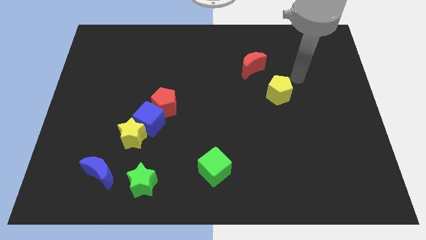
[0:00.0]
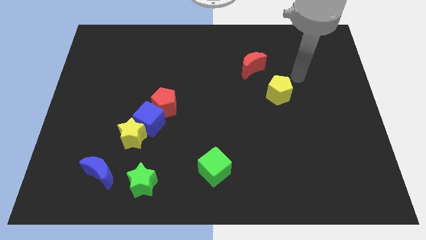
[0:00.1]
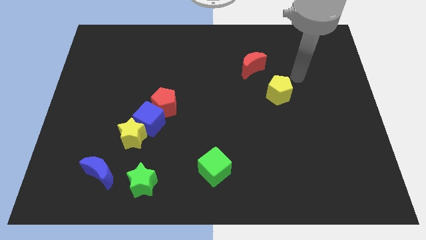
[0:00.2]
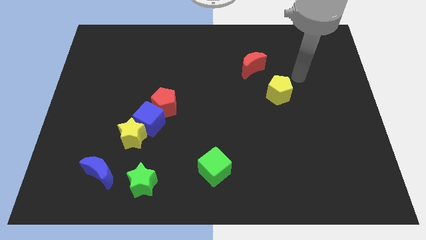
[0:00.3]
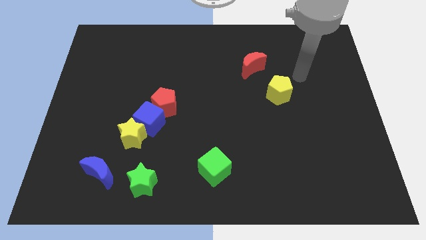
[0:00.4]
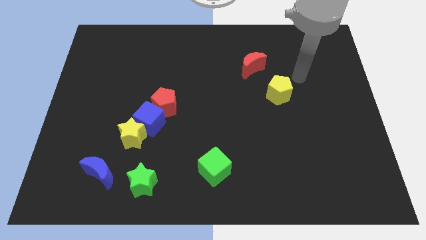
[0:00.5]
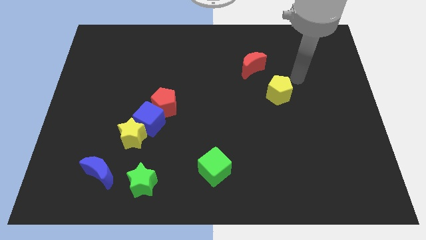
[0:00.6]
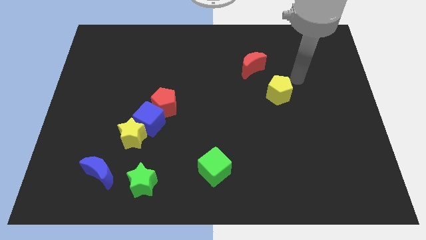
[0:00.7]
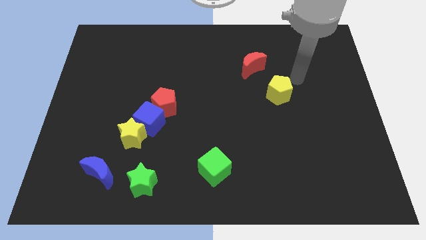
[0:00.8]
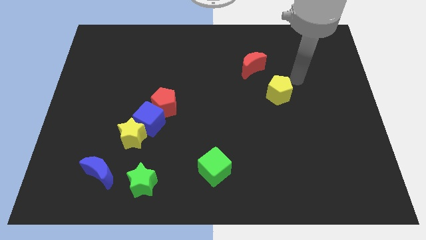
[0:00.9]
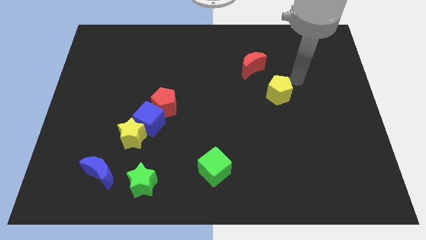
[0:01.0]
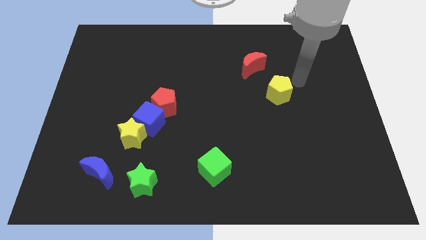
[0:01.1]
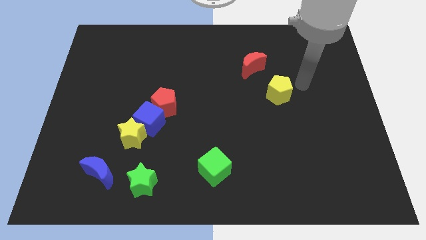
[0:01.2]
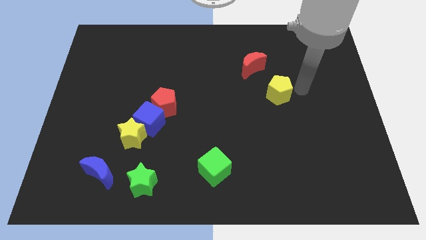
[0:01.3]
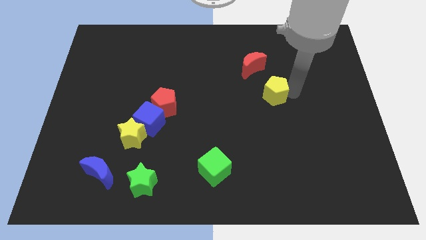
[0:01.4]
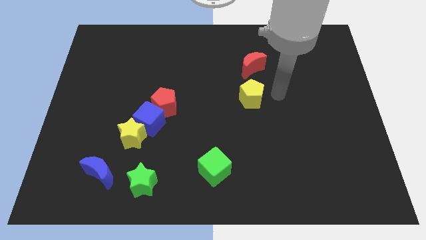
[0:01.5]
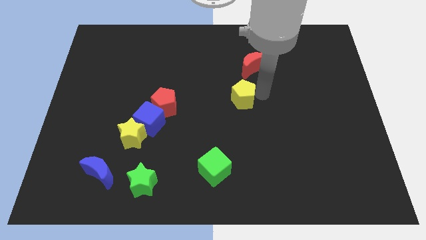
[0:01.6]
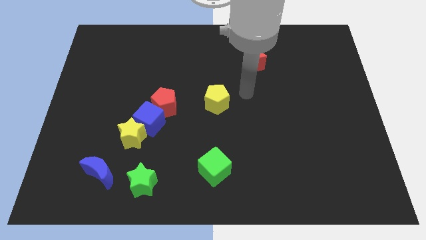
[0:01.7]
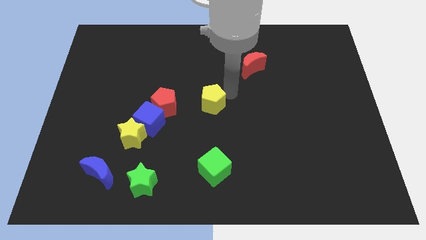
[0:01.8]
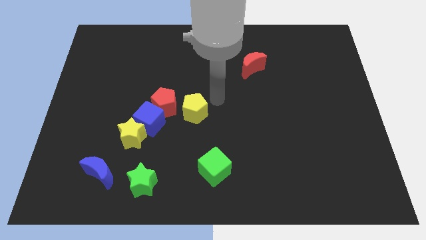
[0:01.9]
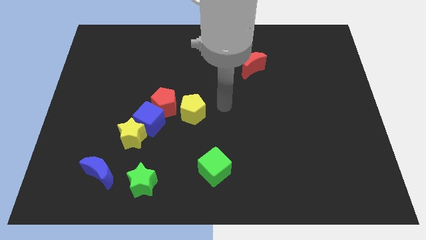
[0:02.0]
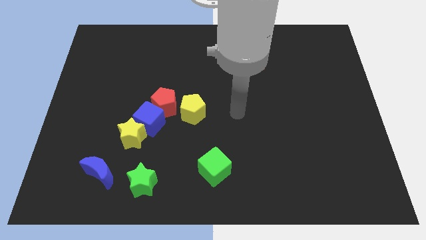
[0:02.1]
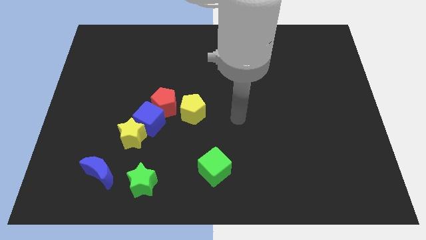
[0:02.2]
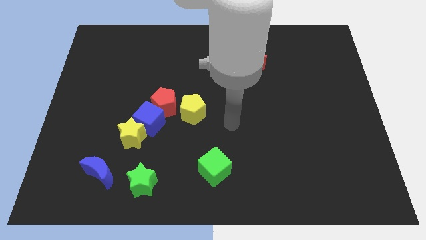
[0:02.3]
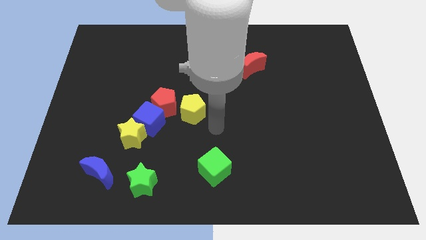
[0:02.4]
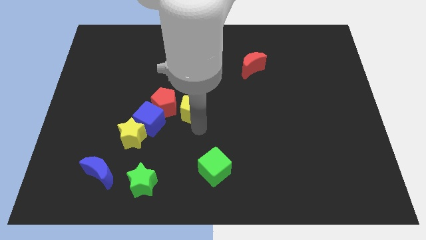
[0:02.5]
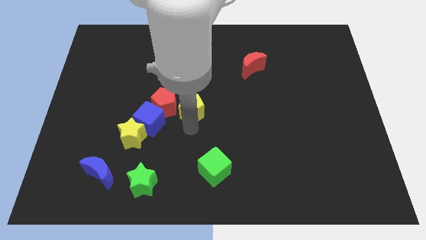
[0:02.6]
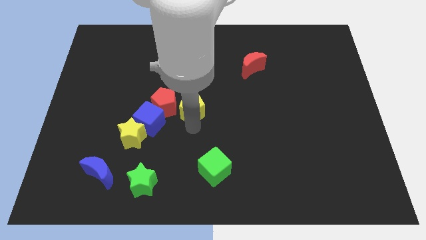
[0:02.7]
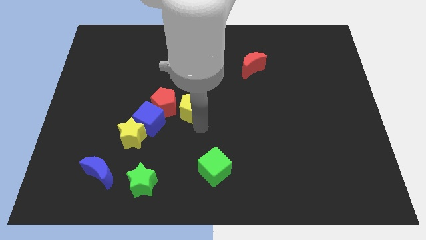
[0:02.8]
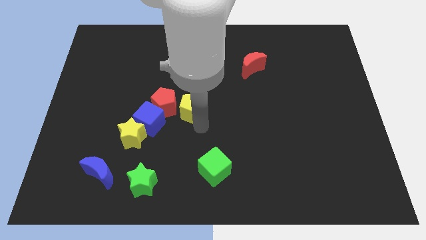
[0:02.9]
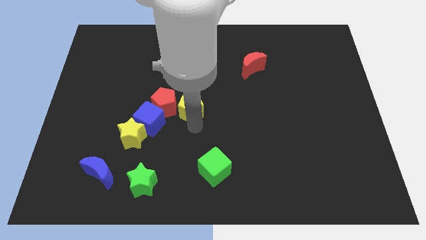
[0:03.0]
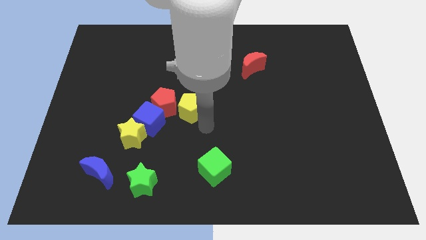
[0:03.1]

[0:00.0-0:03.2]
bring the yellow pentagon close to the right side of the red pentagon

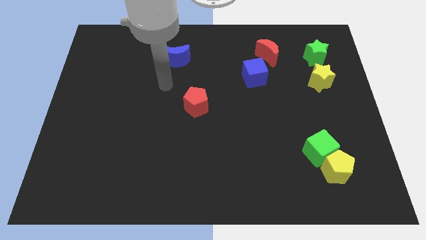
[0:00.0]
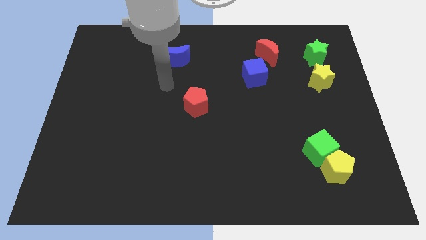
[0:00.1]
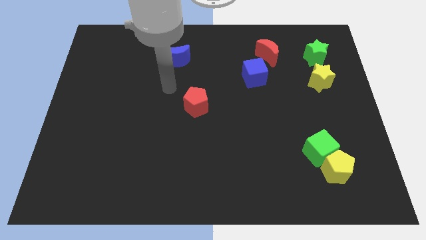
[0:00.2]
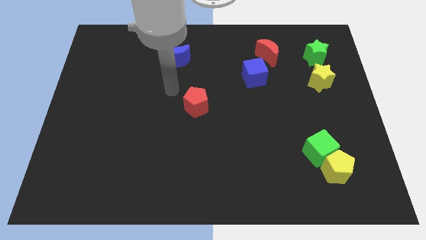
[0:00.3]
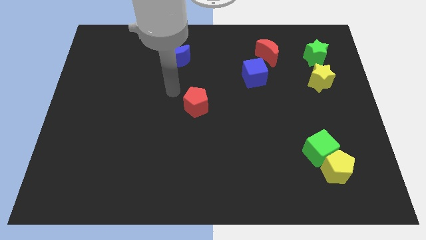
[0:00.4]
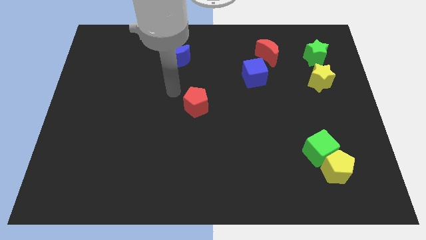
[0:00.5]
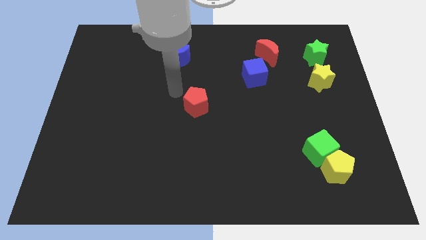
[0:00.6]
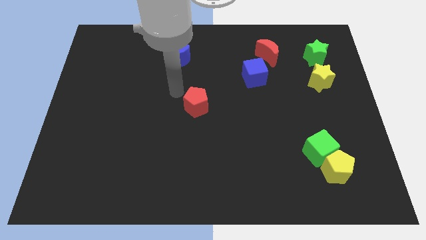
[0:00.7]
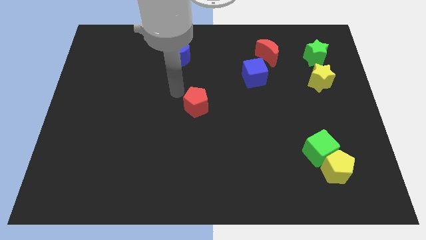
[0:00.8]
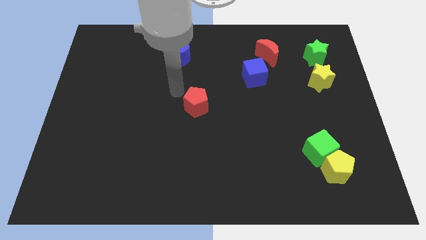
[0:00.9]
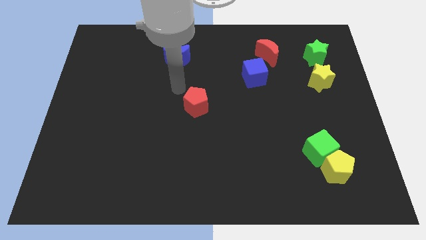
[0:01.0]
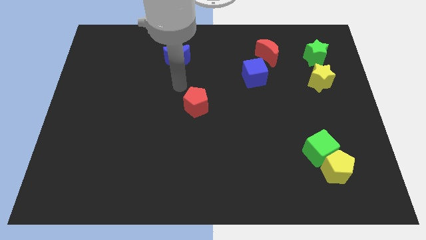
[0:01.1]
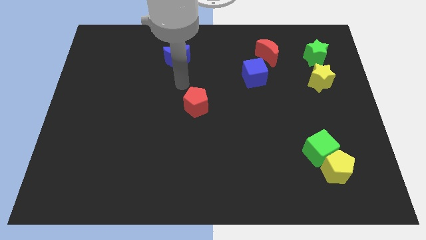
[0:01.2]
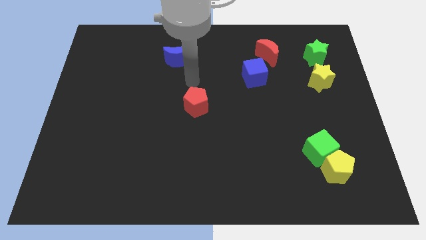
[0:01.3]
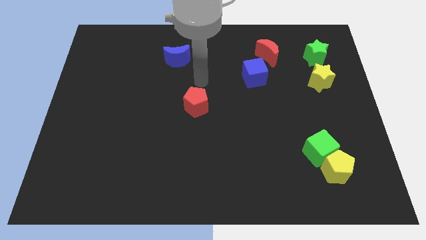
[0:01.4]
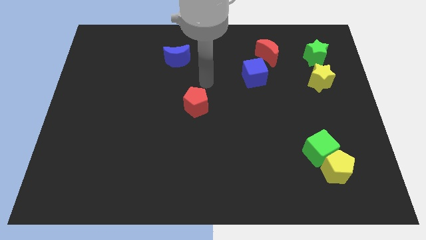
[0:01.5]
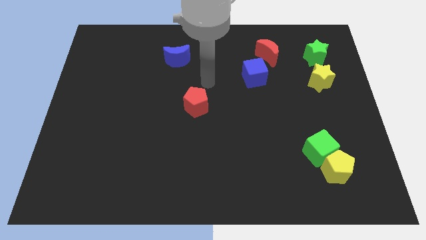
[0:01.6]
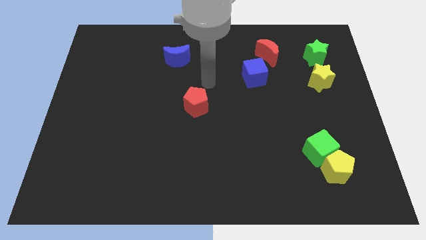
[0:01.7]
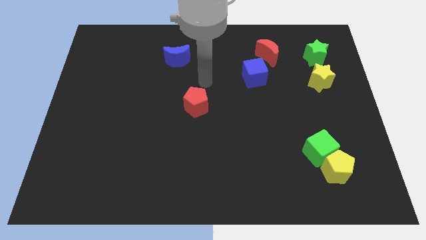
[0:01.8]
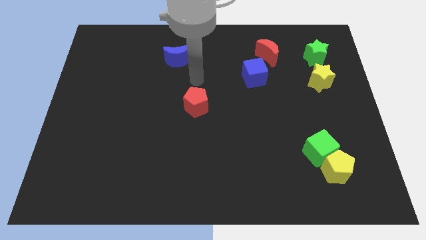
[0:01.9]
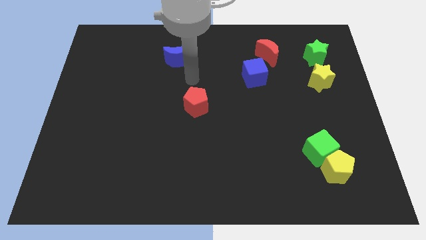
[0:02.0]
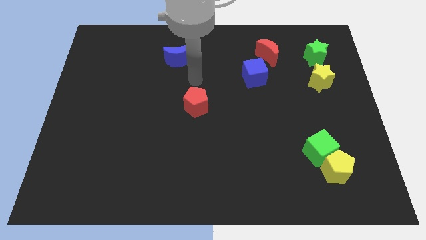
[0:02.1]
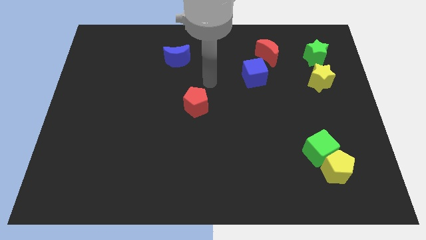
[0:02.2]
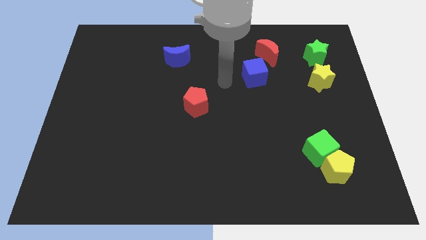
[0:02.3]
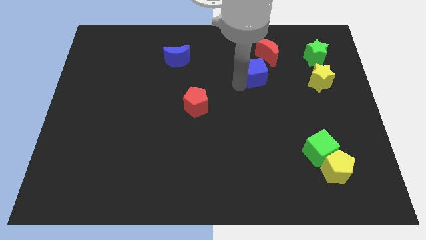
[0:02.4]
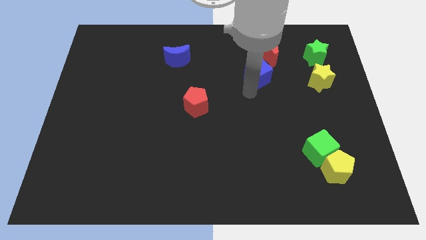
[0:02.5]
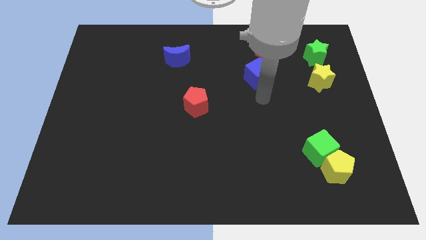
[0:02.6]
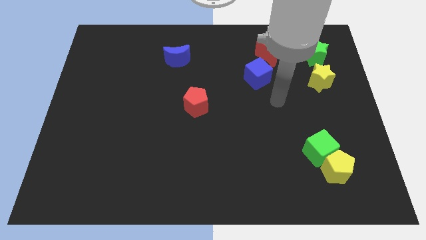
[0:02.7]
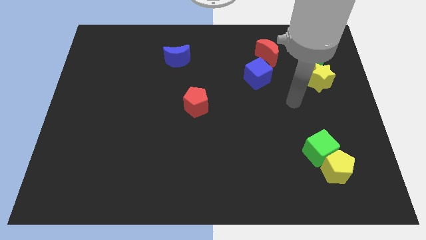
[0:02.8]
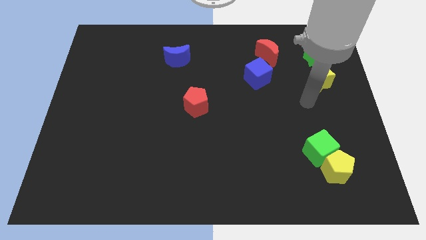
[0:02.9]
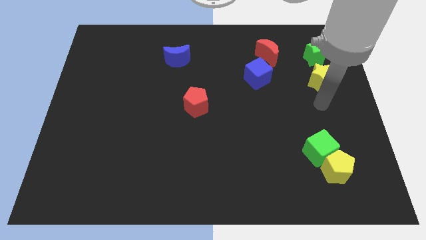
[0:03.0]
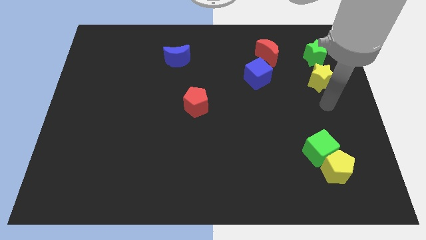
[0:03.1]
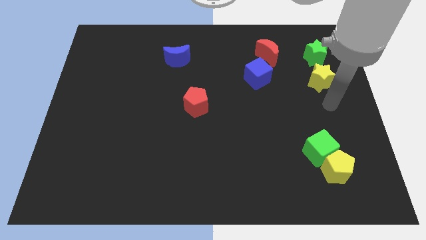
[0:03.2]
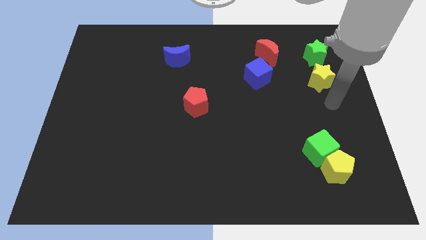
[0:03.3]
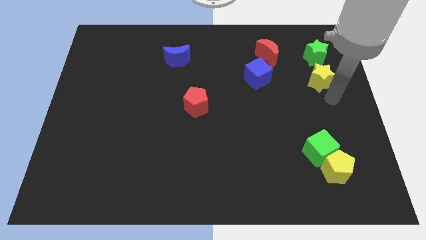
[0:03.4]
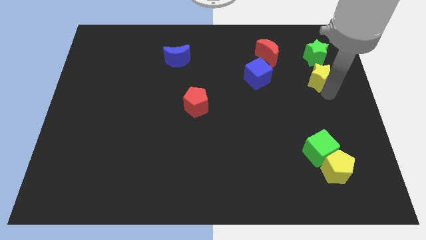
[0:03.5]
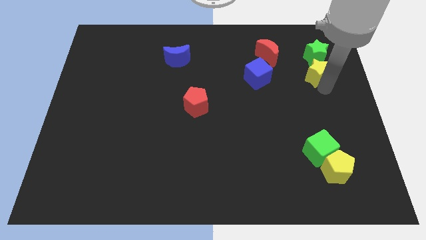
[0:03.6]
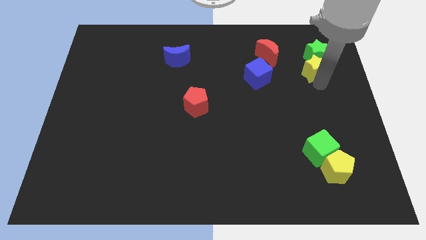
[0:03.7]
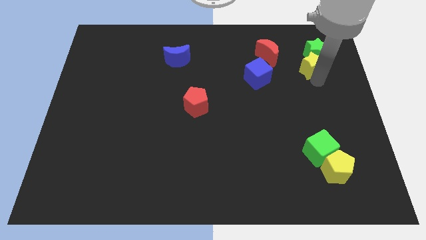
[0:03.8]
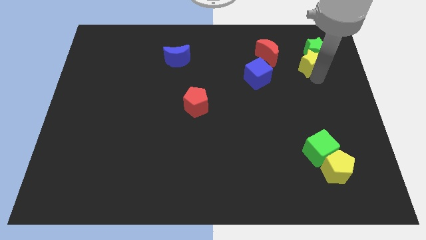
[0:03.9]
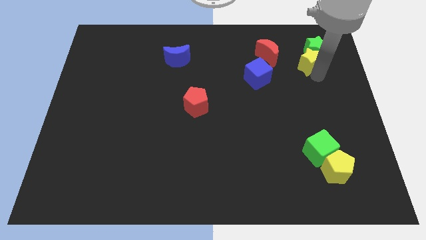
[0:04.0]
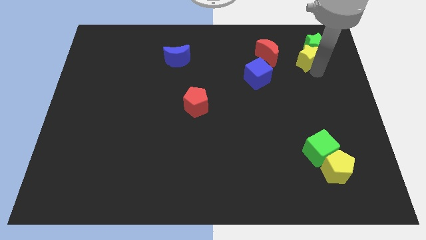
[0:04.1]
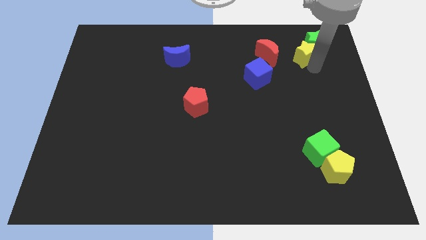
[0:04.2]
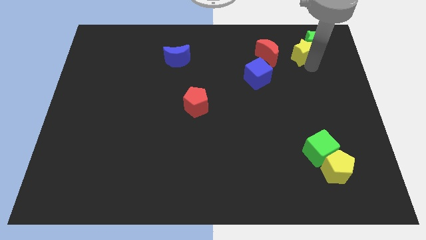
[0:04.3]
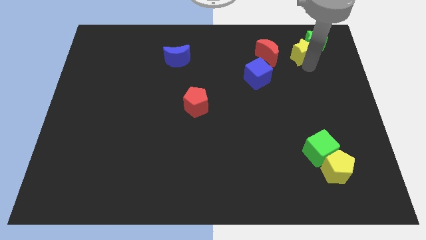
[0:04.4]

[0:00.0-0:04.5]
move the yellow star into the green star

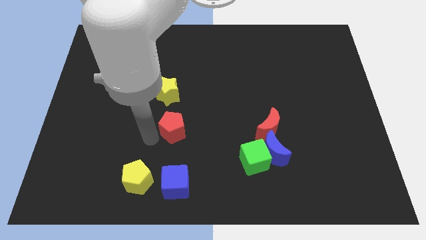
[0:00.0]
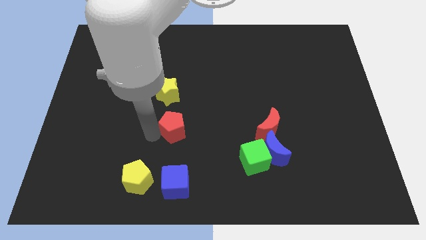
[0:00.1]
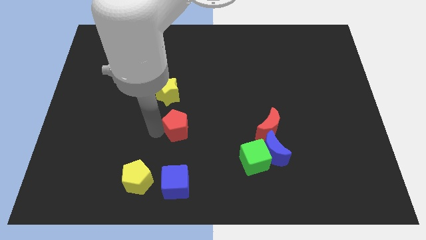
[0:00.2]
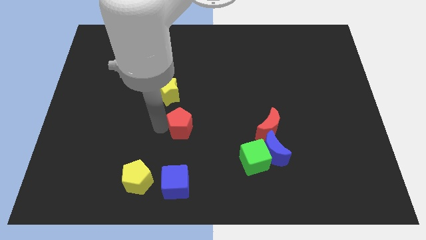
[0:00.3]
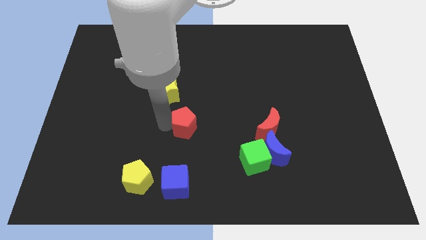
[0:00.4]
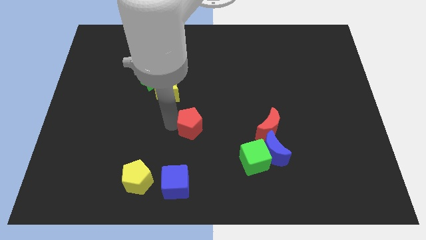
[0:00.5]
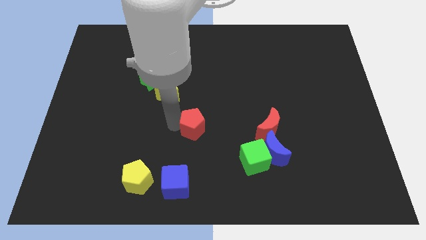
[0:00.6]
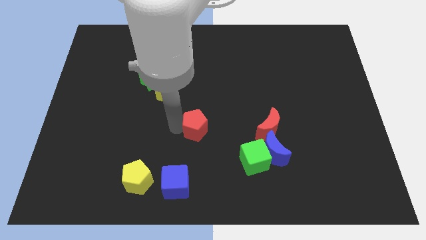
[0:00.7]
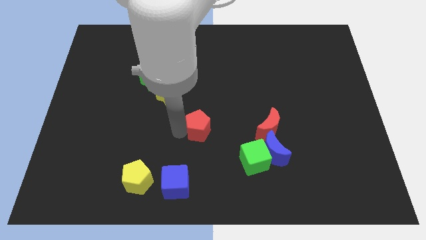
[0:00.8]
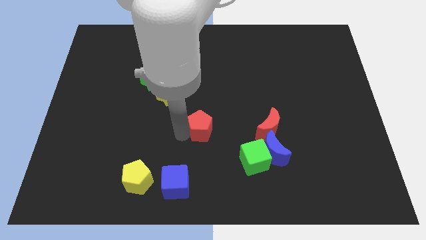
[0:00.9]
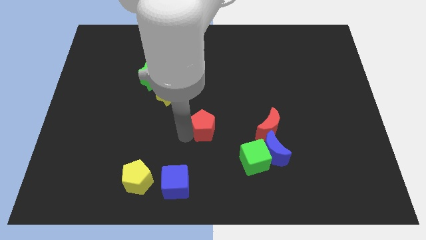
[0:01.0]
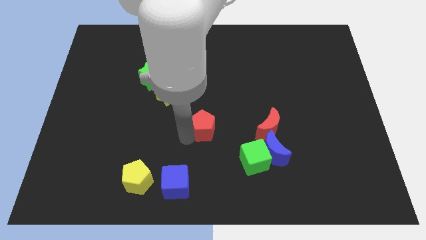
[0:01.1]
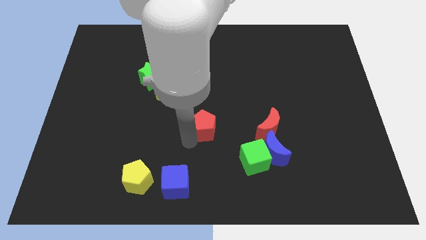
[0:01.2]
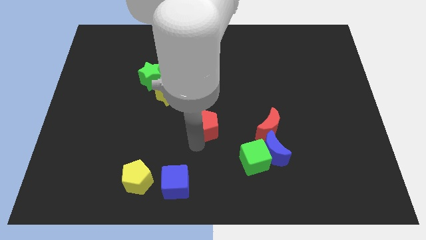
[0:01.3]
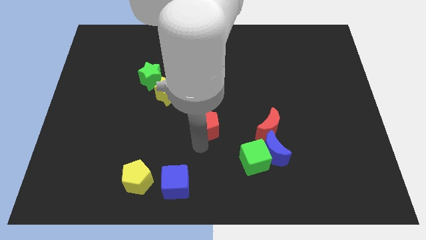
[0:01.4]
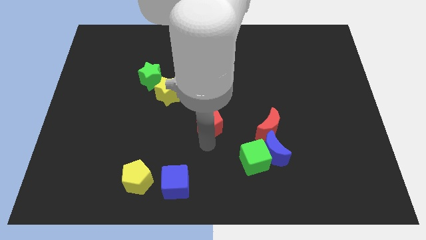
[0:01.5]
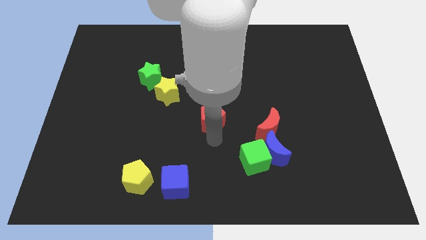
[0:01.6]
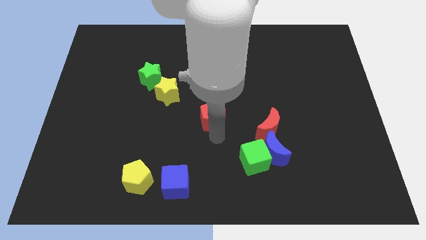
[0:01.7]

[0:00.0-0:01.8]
move the red pentagon diagonal to the green cube
